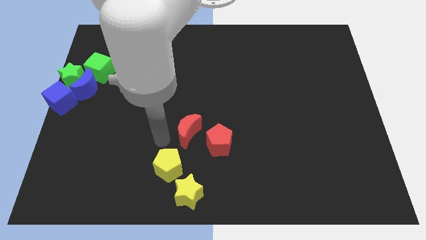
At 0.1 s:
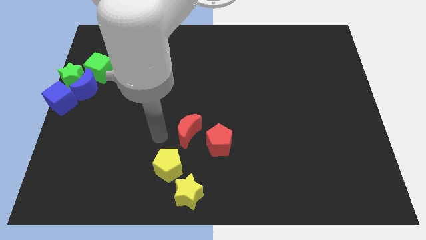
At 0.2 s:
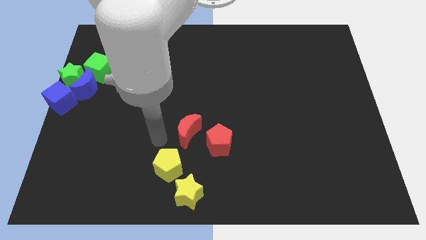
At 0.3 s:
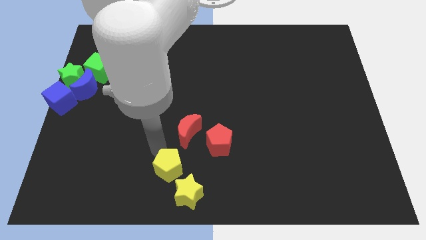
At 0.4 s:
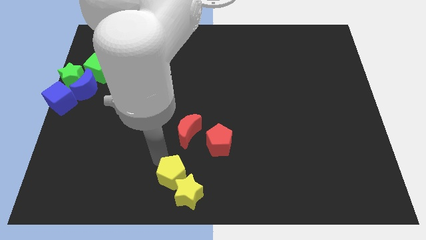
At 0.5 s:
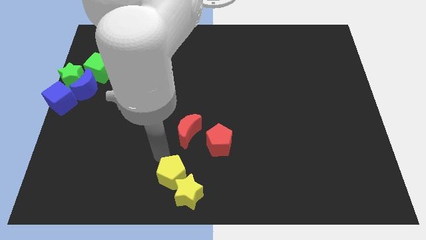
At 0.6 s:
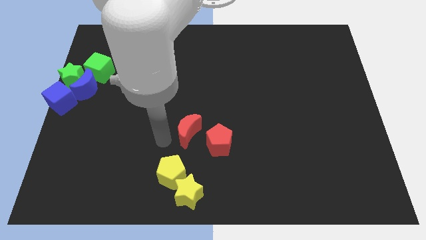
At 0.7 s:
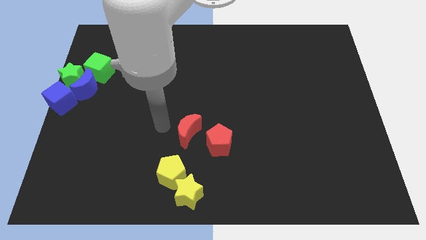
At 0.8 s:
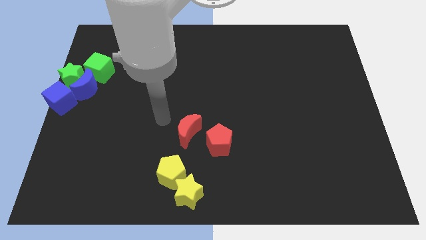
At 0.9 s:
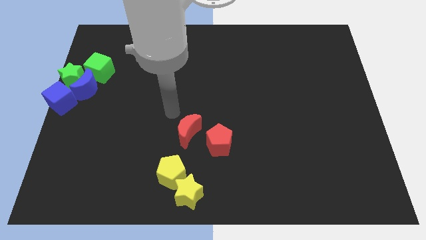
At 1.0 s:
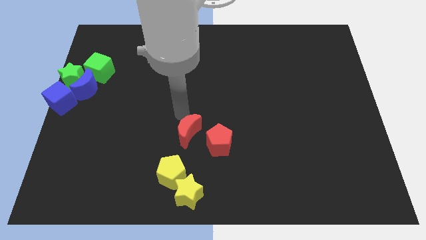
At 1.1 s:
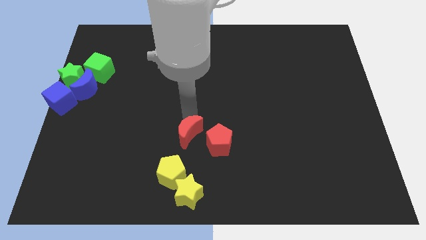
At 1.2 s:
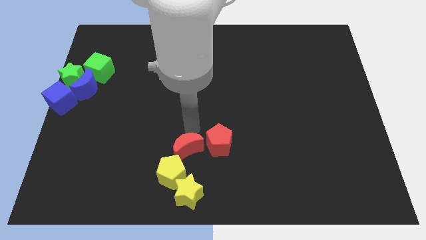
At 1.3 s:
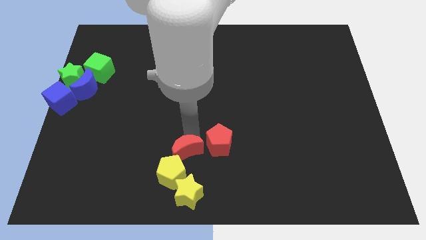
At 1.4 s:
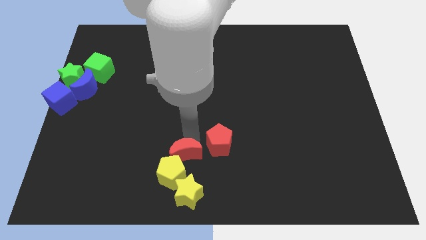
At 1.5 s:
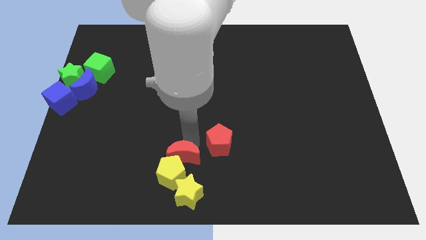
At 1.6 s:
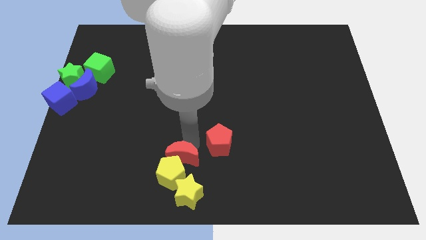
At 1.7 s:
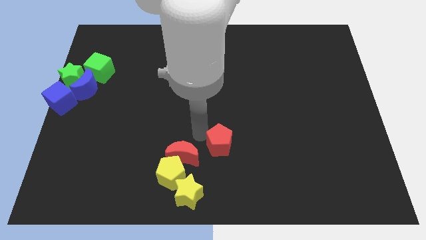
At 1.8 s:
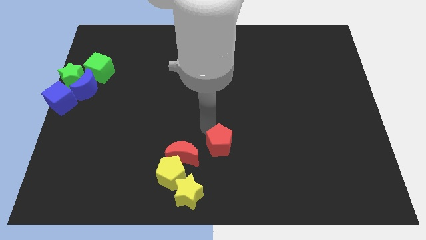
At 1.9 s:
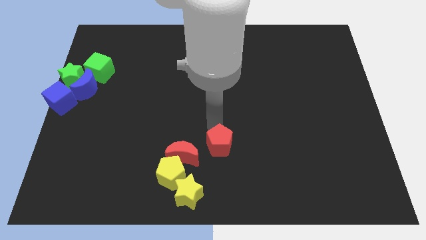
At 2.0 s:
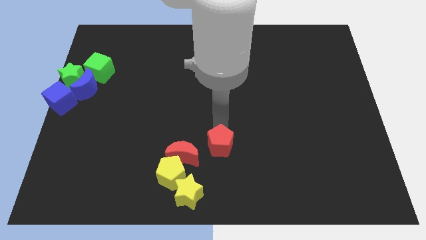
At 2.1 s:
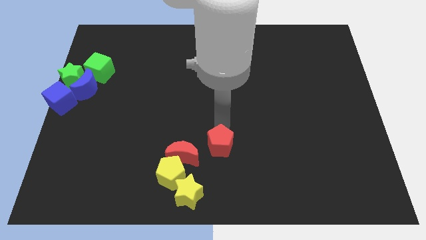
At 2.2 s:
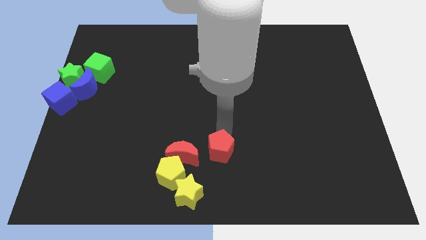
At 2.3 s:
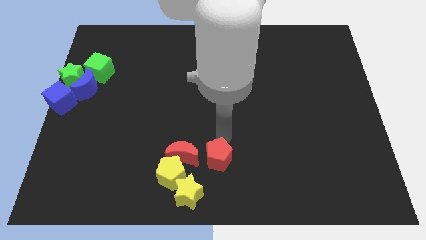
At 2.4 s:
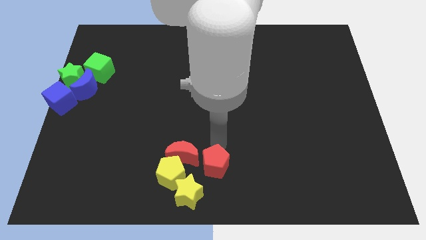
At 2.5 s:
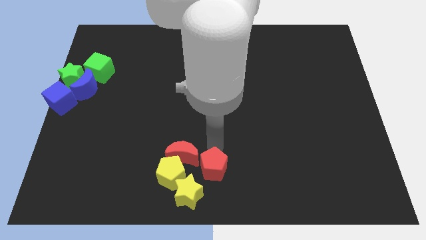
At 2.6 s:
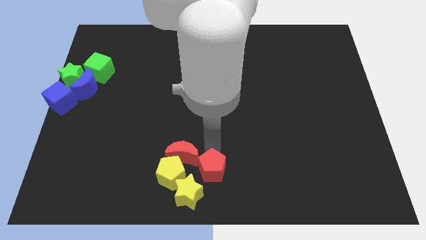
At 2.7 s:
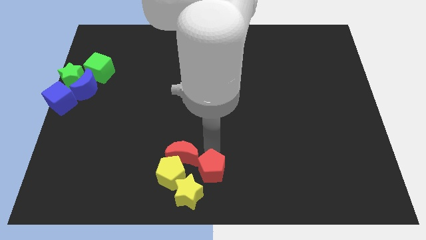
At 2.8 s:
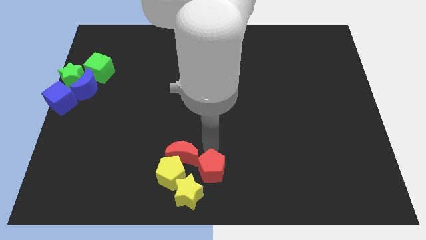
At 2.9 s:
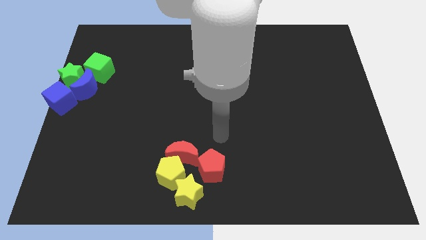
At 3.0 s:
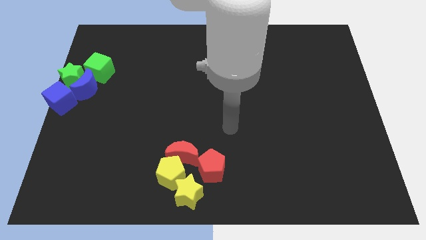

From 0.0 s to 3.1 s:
push both the red blocks close to the yellow blocks

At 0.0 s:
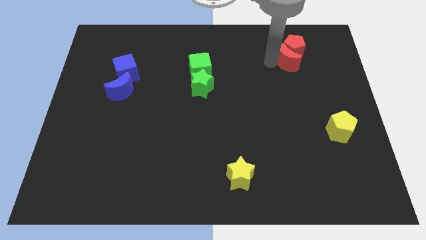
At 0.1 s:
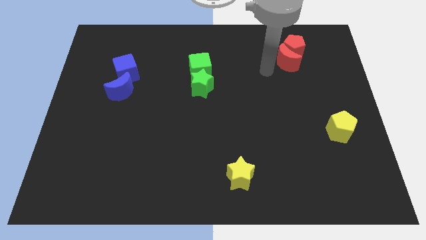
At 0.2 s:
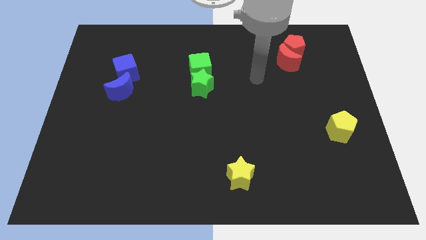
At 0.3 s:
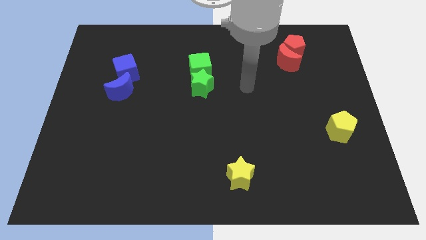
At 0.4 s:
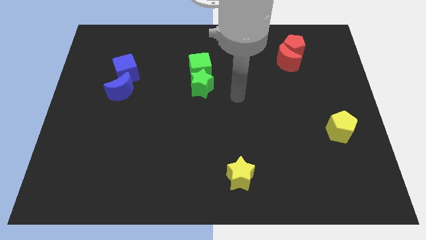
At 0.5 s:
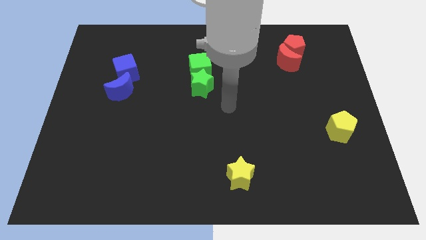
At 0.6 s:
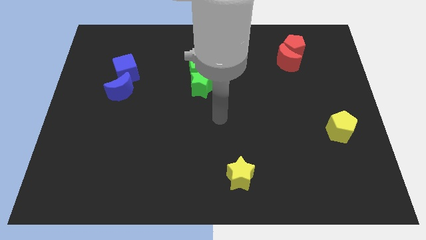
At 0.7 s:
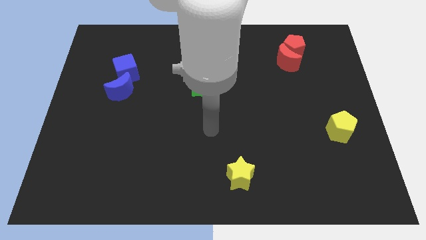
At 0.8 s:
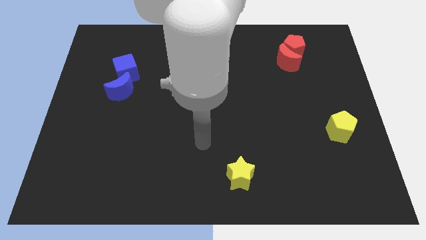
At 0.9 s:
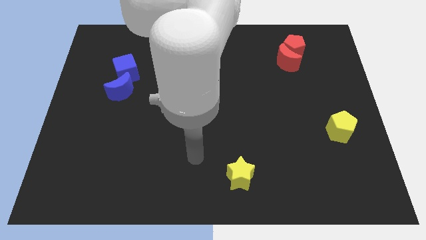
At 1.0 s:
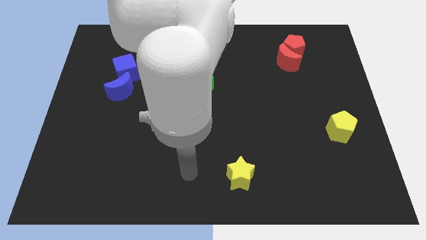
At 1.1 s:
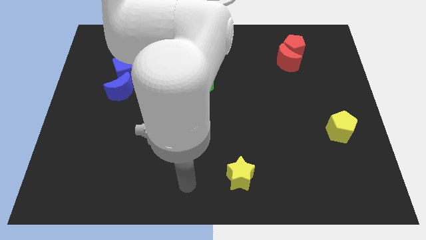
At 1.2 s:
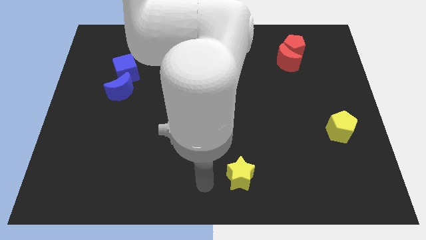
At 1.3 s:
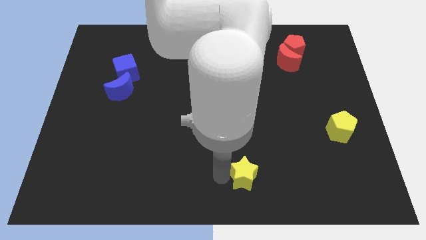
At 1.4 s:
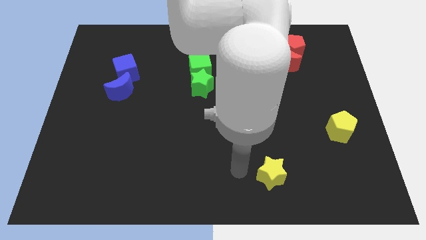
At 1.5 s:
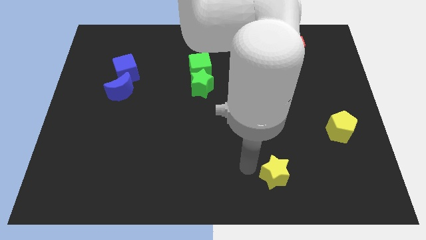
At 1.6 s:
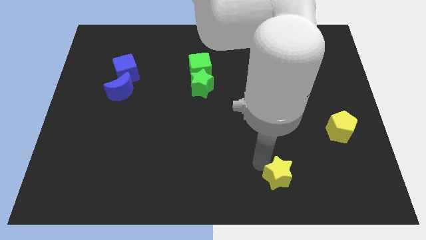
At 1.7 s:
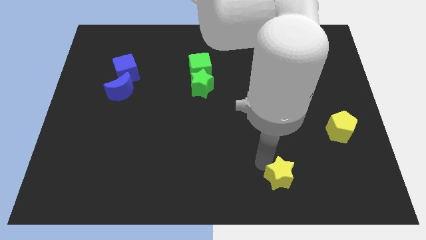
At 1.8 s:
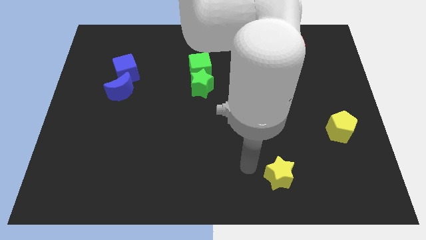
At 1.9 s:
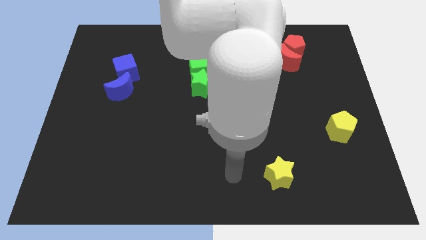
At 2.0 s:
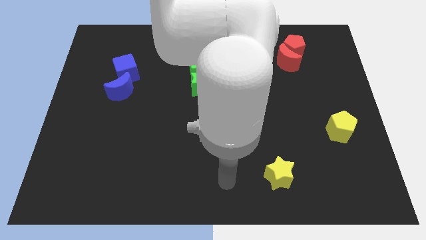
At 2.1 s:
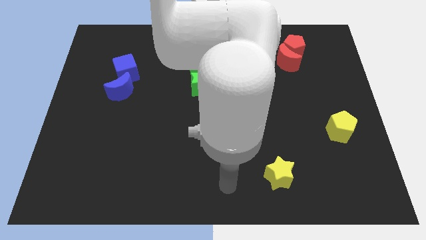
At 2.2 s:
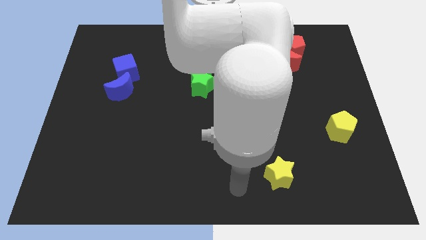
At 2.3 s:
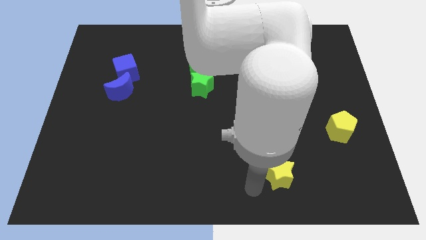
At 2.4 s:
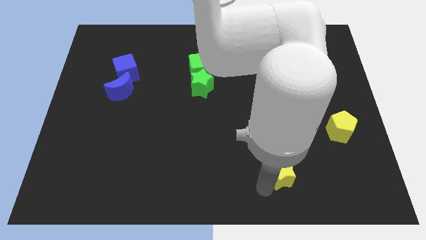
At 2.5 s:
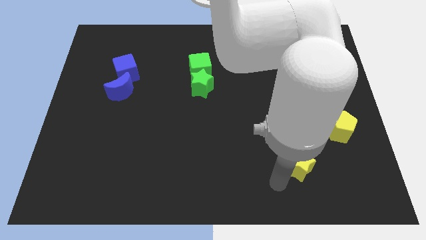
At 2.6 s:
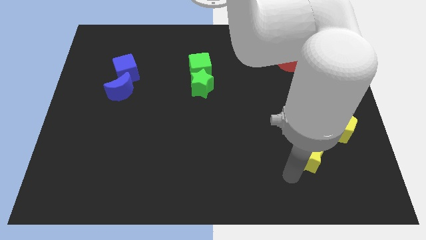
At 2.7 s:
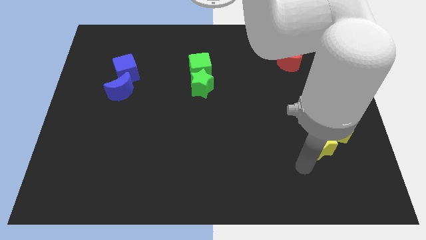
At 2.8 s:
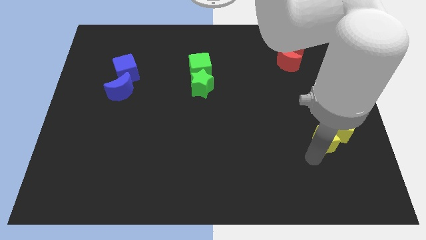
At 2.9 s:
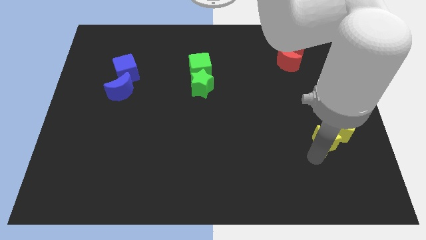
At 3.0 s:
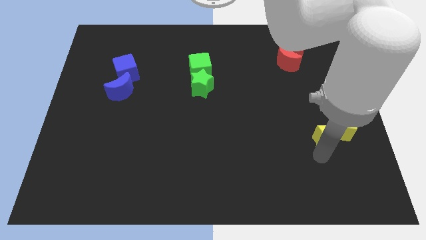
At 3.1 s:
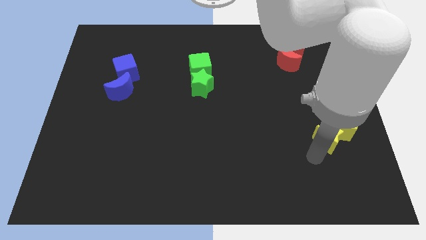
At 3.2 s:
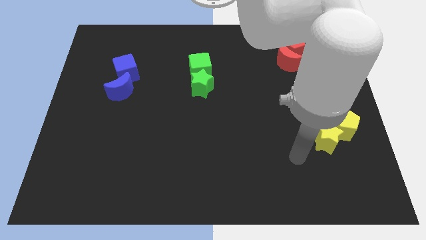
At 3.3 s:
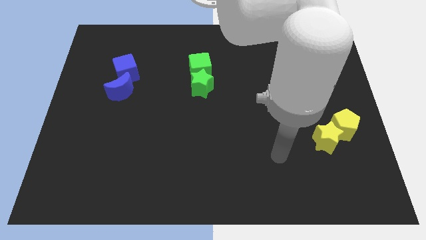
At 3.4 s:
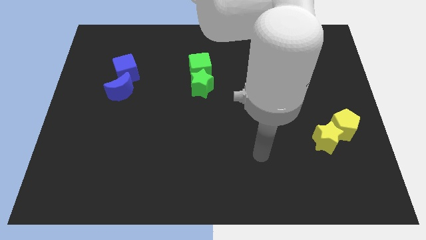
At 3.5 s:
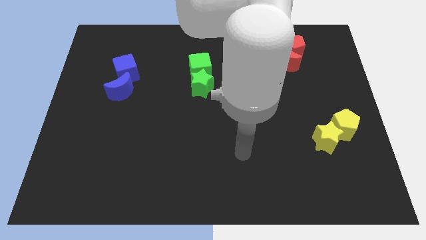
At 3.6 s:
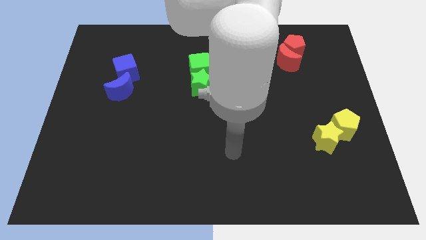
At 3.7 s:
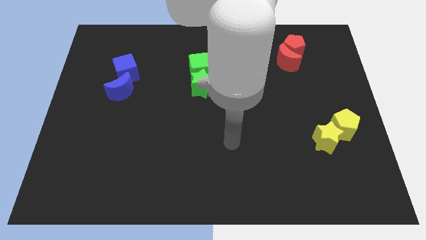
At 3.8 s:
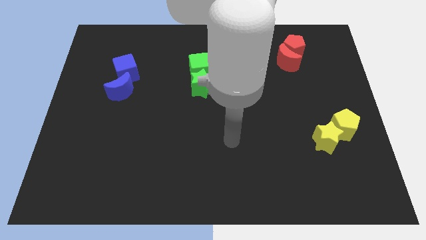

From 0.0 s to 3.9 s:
slide the yellow star towards the yellow pentagon

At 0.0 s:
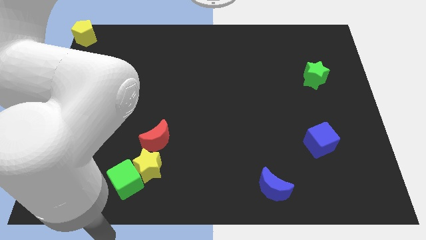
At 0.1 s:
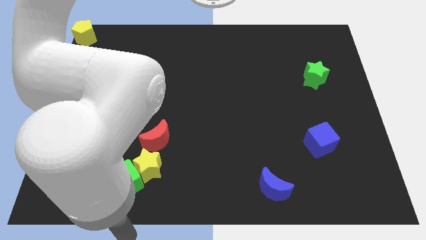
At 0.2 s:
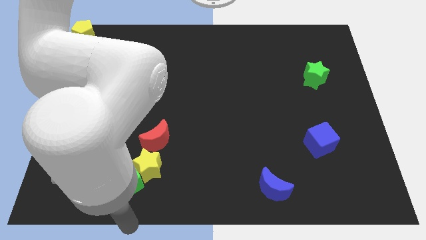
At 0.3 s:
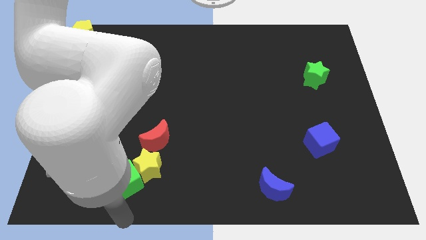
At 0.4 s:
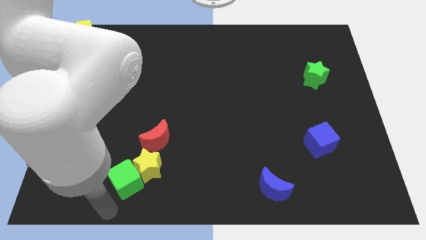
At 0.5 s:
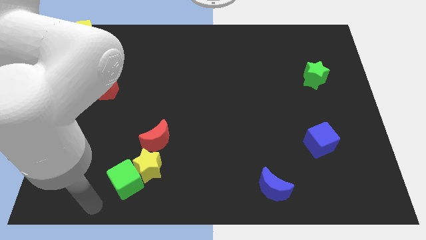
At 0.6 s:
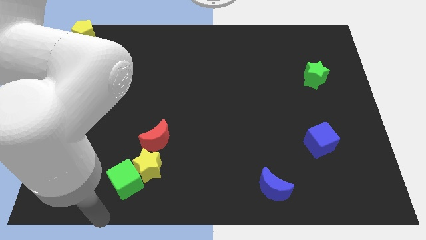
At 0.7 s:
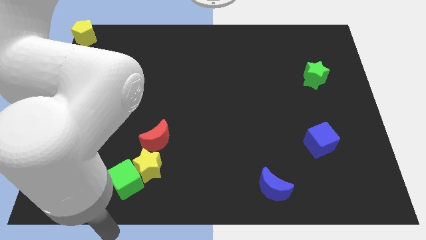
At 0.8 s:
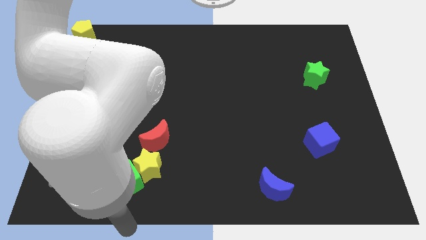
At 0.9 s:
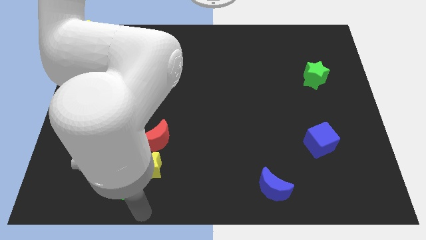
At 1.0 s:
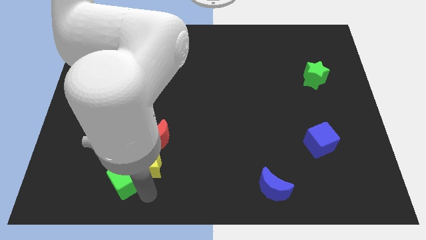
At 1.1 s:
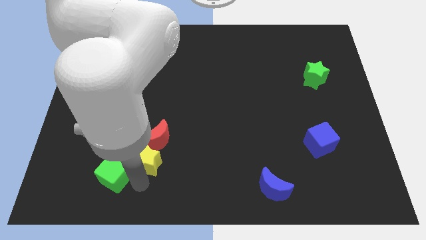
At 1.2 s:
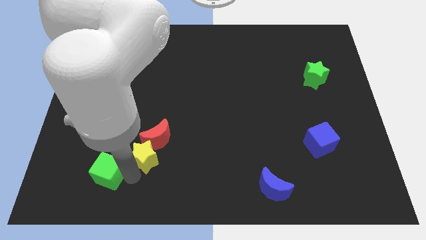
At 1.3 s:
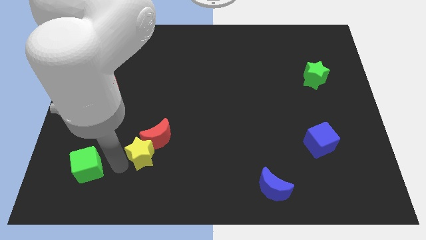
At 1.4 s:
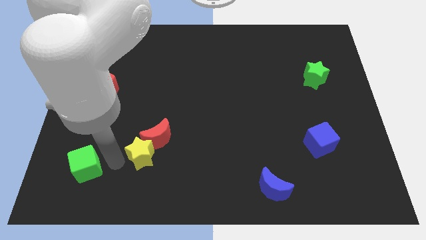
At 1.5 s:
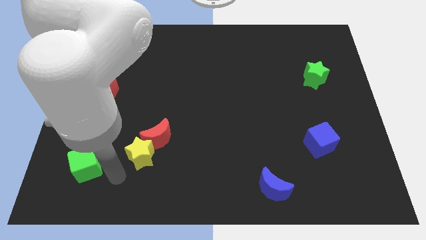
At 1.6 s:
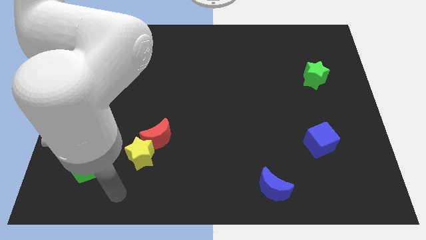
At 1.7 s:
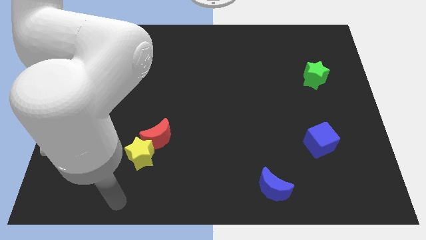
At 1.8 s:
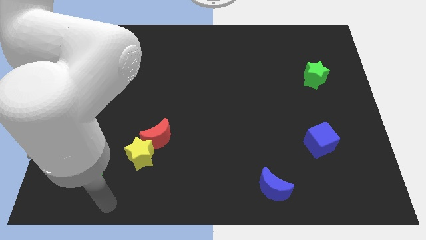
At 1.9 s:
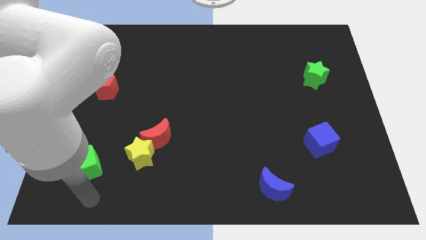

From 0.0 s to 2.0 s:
separate the green cube from the yellow star
